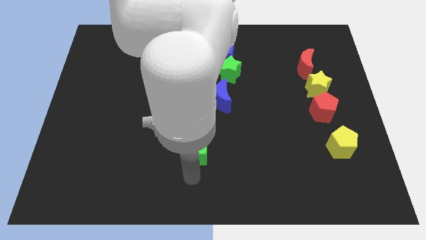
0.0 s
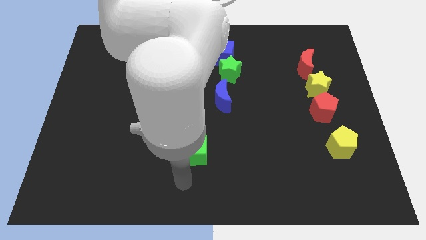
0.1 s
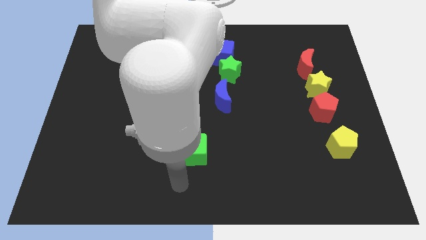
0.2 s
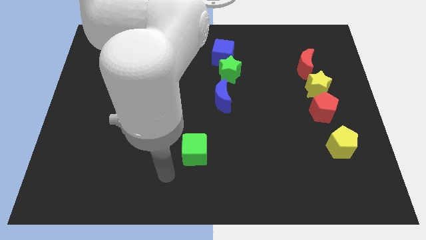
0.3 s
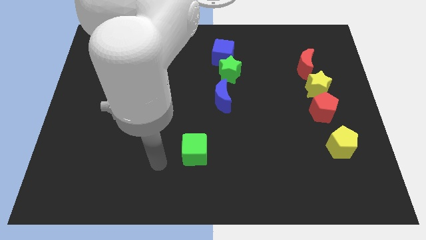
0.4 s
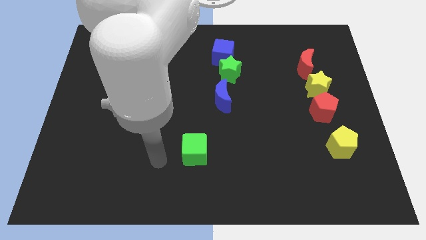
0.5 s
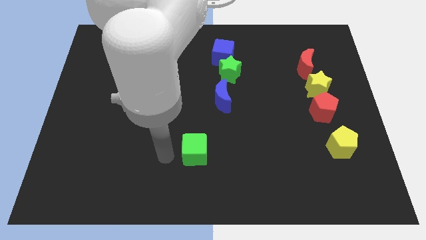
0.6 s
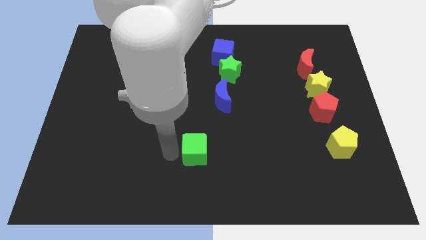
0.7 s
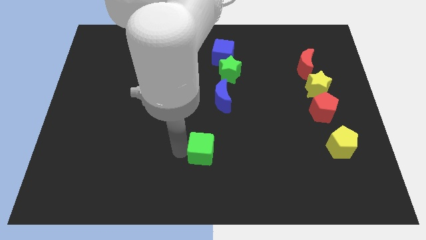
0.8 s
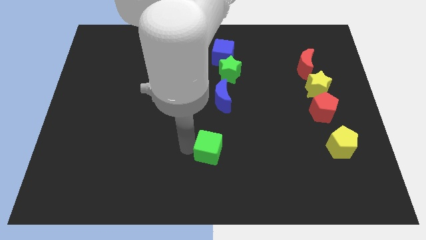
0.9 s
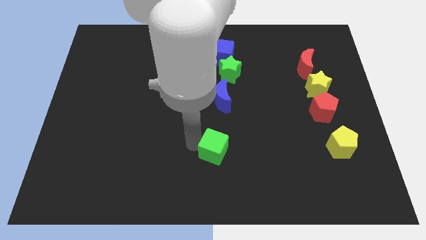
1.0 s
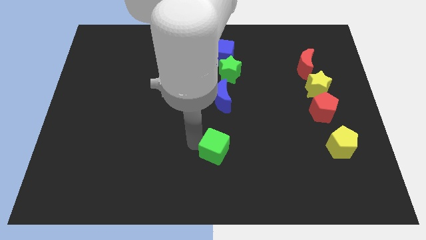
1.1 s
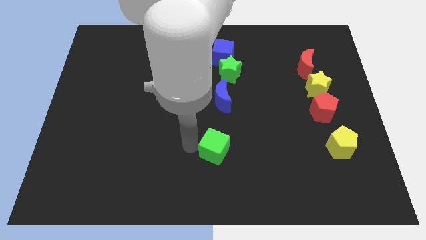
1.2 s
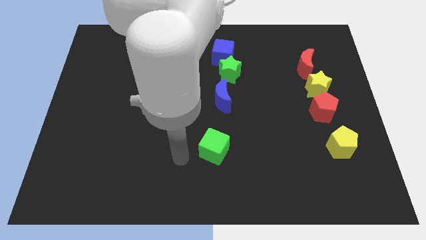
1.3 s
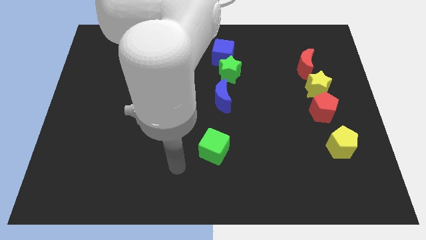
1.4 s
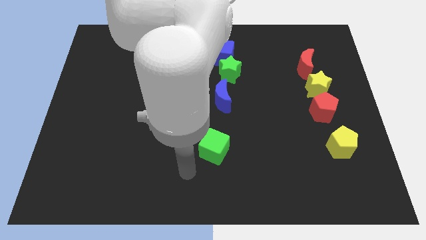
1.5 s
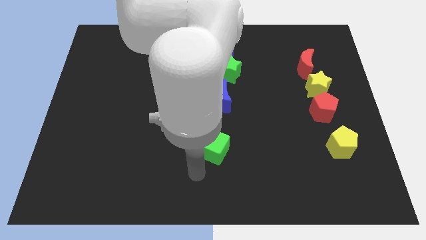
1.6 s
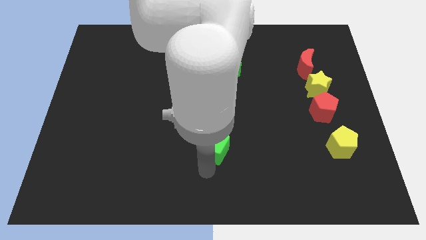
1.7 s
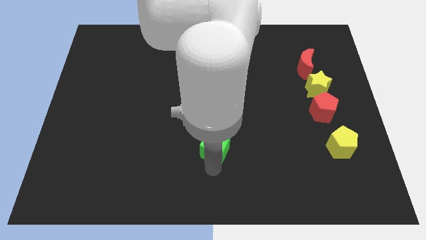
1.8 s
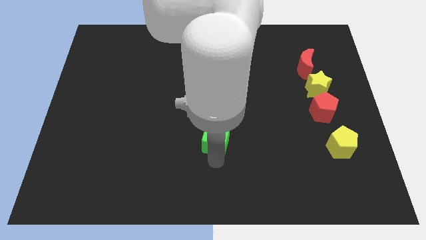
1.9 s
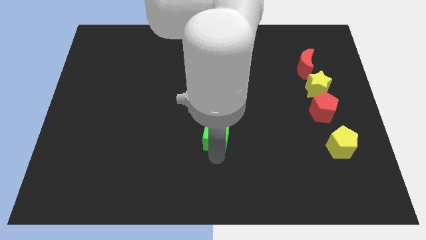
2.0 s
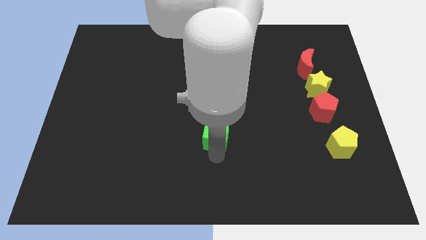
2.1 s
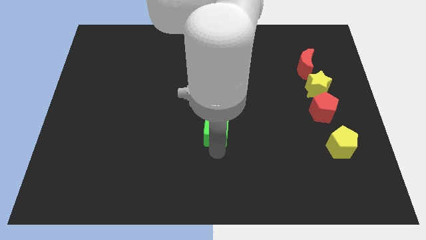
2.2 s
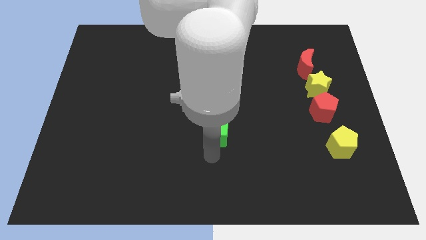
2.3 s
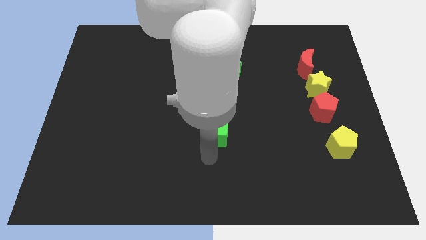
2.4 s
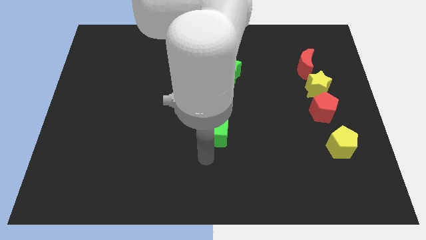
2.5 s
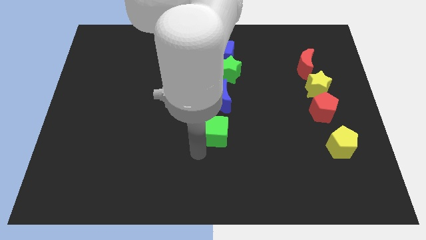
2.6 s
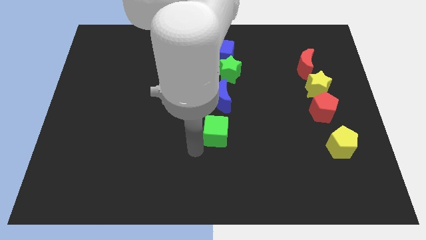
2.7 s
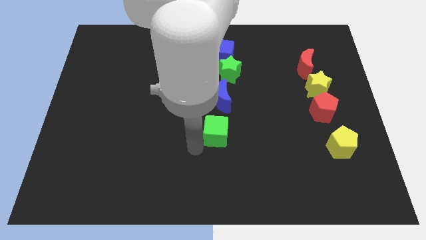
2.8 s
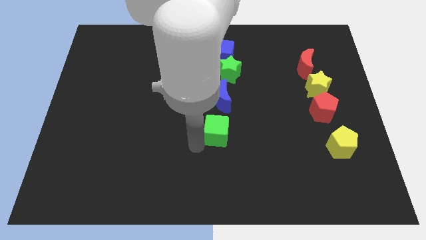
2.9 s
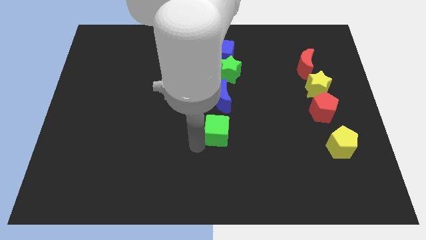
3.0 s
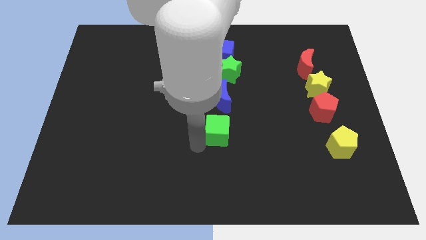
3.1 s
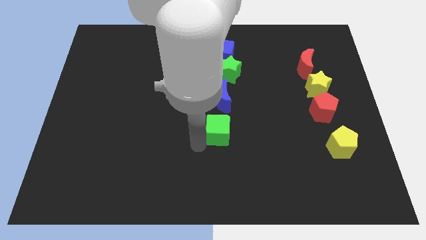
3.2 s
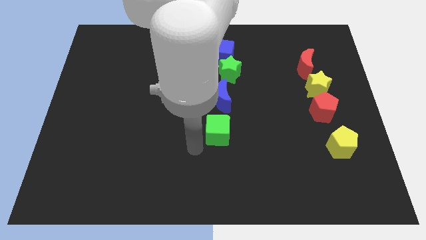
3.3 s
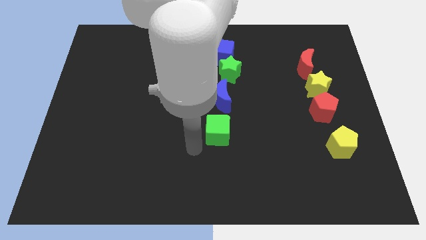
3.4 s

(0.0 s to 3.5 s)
push the green cube at the bpottom side of the blue moon

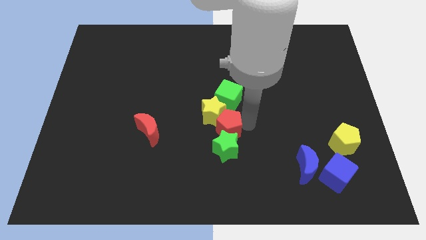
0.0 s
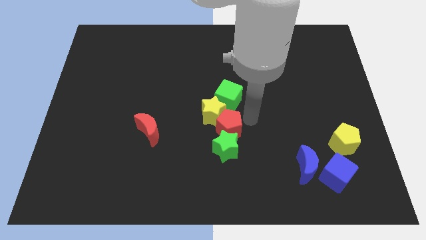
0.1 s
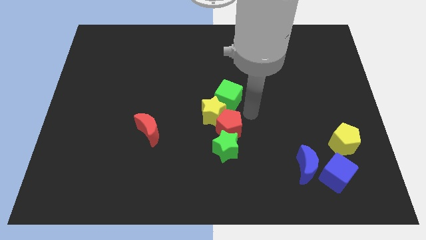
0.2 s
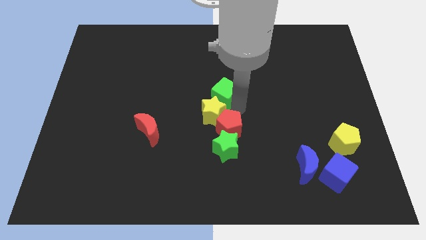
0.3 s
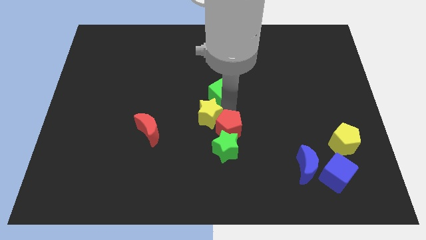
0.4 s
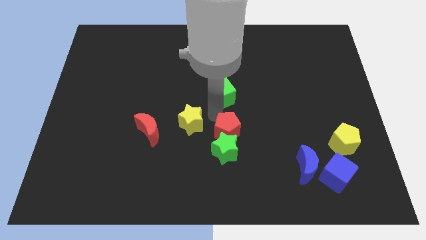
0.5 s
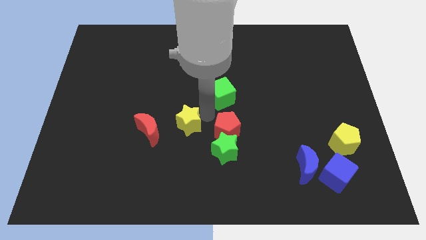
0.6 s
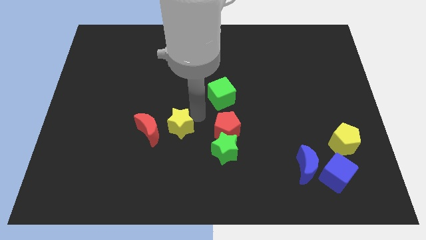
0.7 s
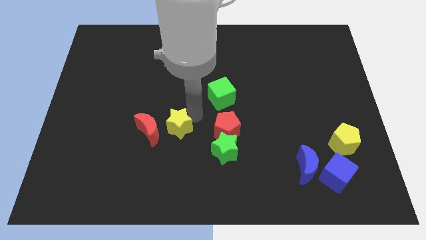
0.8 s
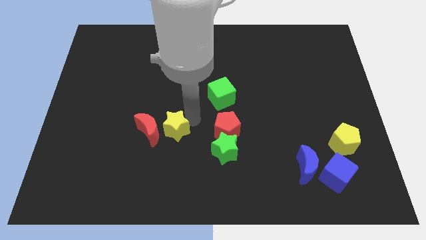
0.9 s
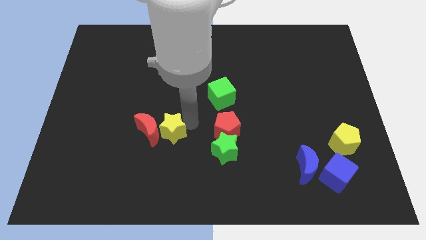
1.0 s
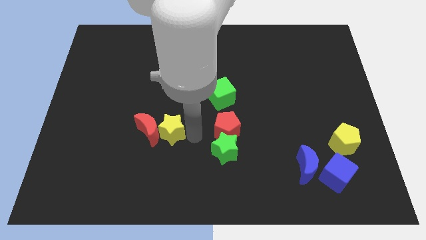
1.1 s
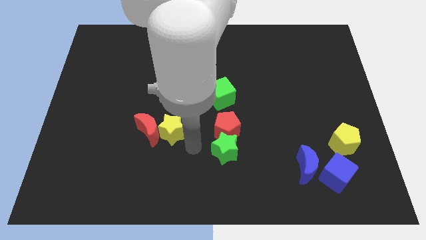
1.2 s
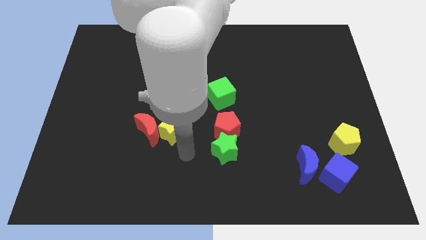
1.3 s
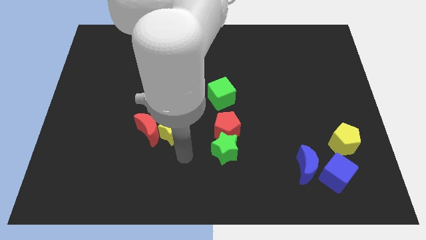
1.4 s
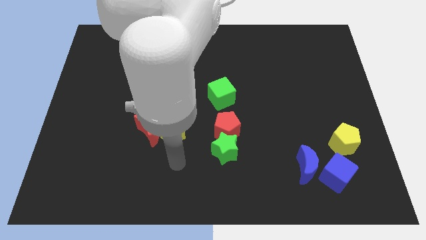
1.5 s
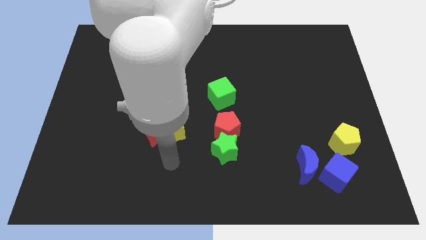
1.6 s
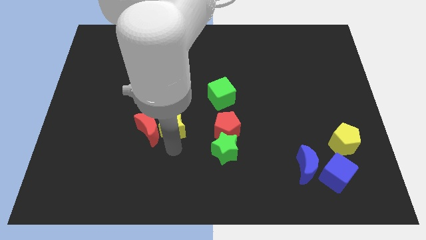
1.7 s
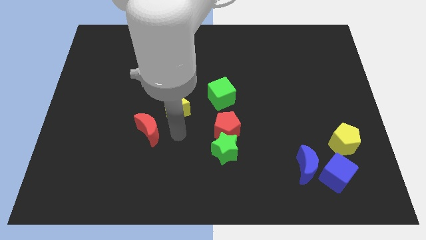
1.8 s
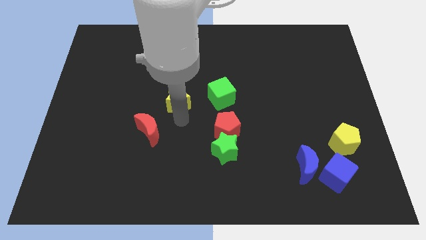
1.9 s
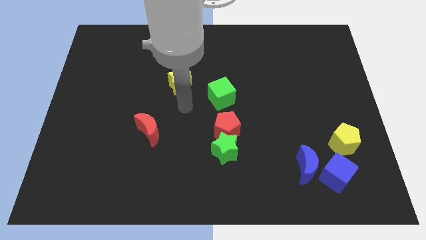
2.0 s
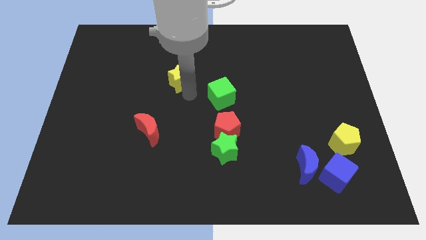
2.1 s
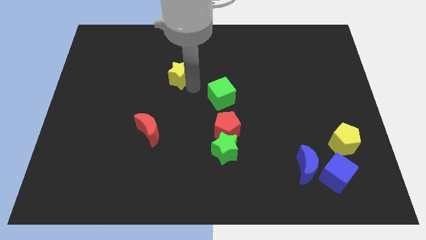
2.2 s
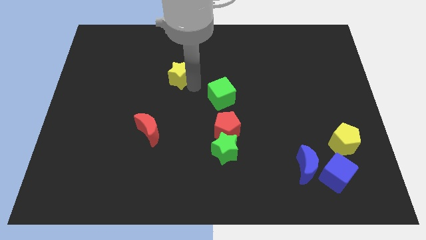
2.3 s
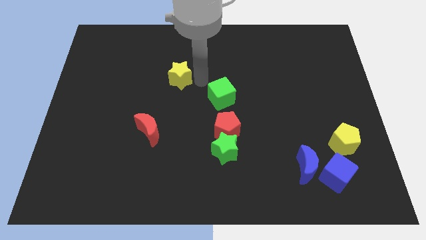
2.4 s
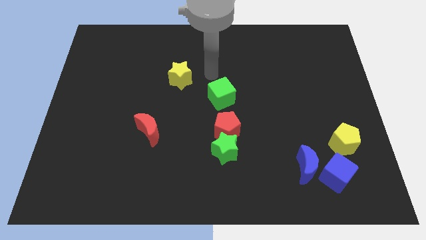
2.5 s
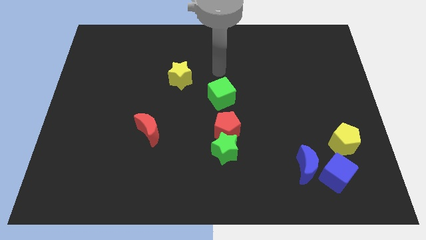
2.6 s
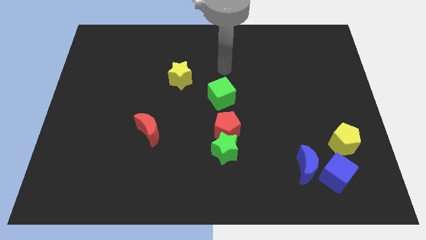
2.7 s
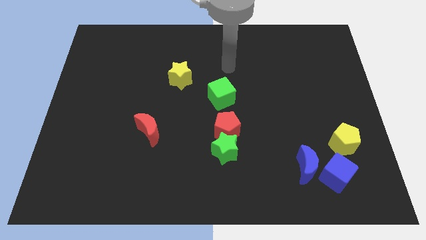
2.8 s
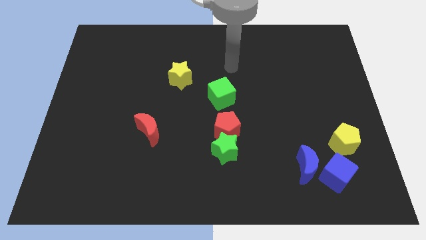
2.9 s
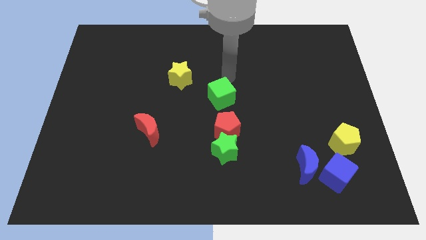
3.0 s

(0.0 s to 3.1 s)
push the yellow star towards the top of the board

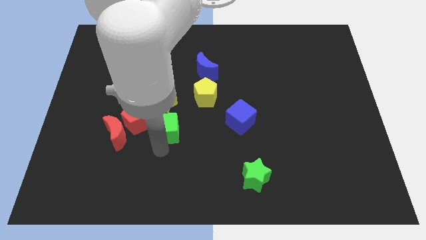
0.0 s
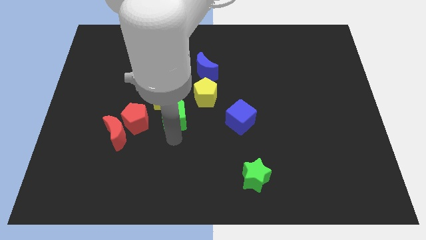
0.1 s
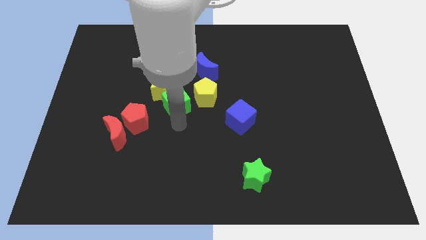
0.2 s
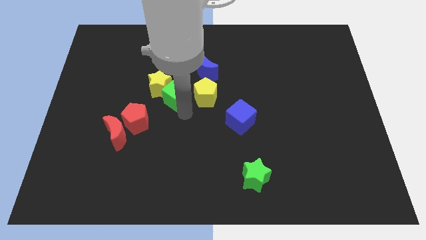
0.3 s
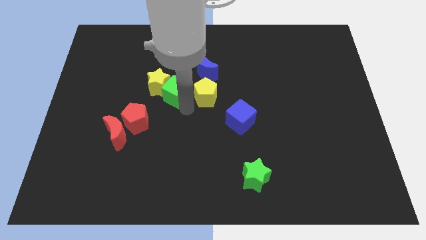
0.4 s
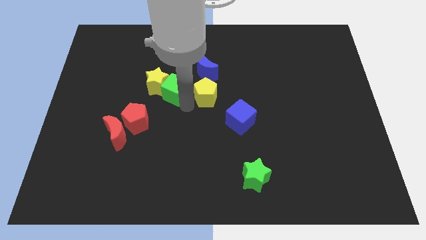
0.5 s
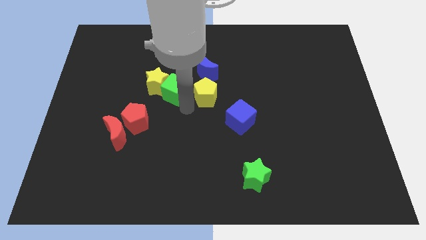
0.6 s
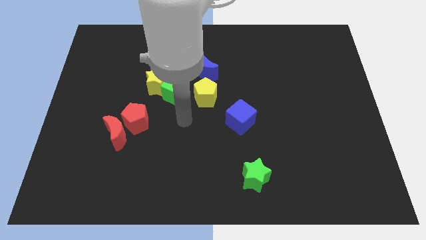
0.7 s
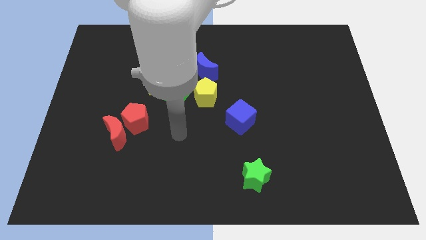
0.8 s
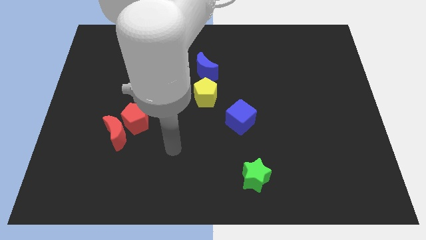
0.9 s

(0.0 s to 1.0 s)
move the green cube in between the yellow star and pentagon

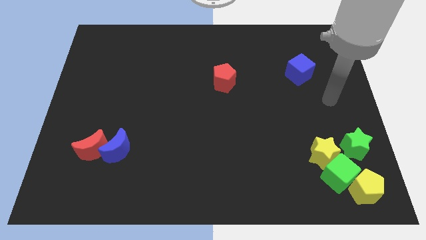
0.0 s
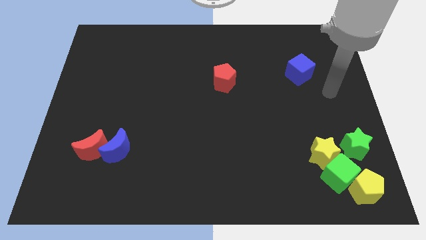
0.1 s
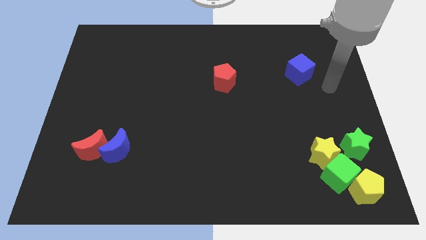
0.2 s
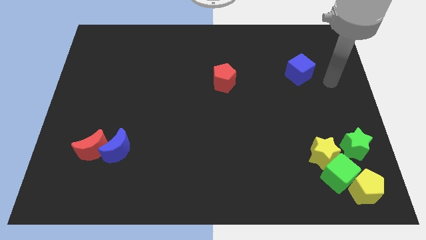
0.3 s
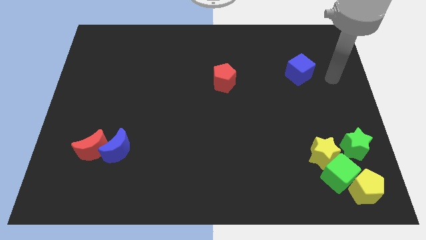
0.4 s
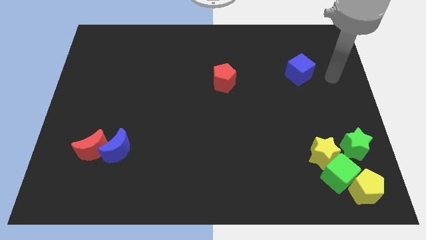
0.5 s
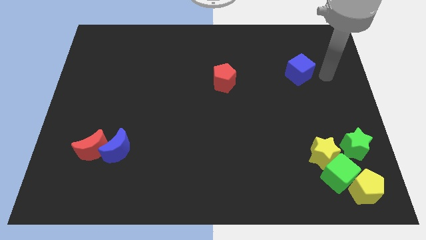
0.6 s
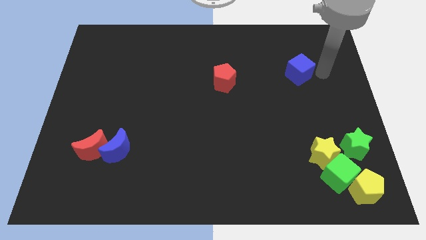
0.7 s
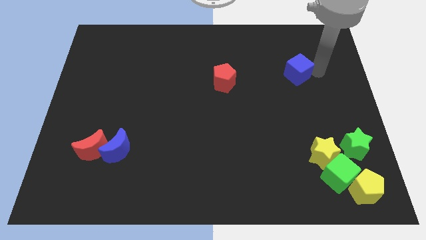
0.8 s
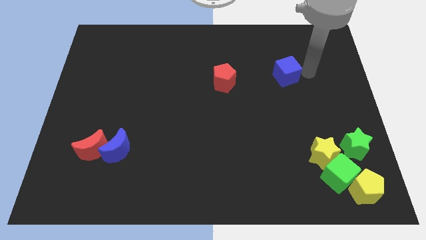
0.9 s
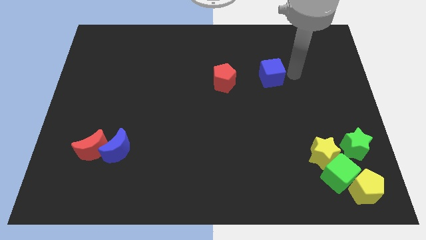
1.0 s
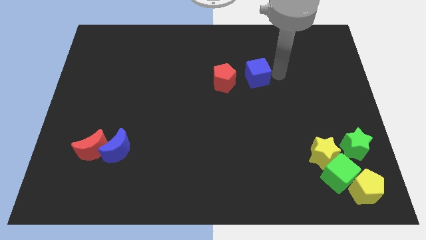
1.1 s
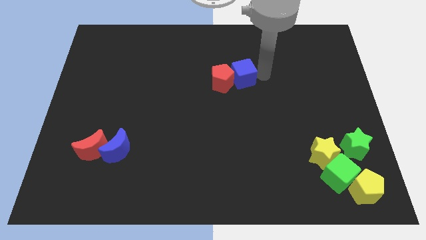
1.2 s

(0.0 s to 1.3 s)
push the blue cube into red pentagon

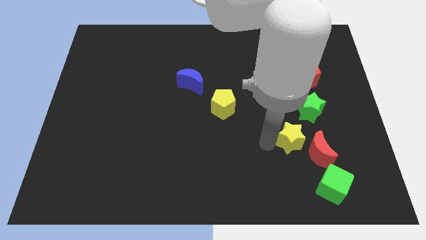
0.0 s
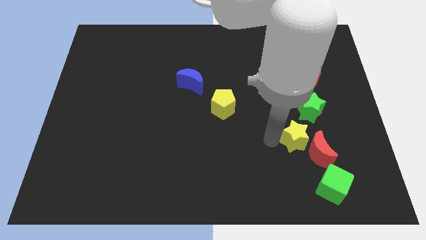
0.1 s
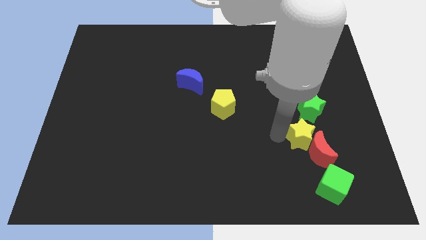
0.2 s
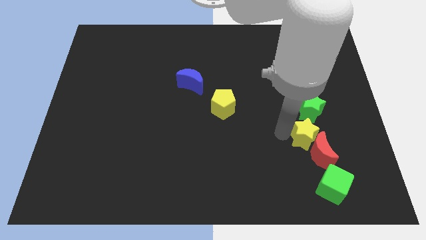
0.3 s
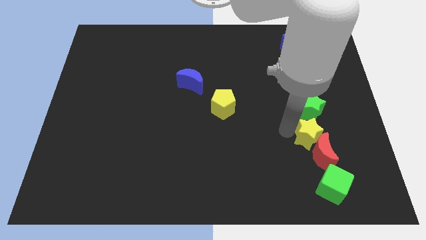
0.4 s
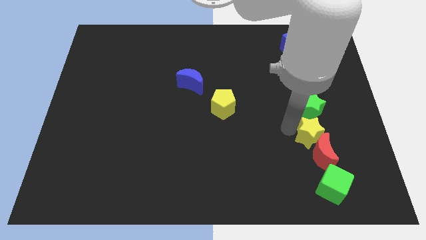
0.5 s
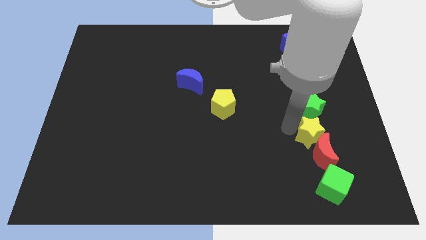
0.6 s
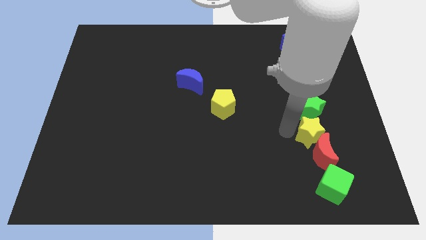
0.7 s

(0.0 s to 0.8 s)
touch the red crescent with yellow star
